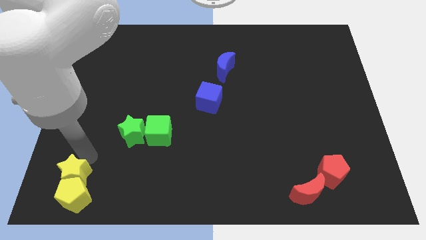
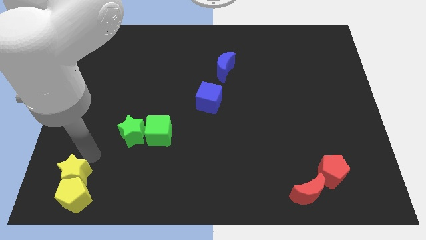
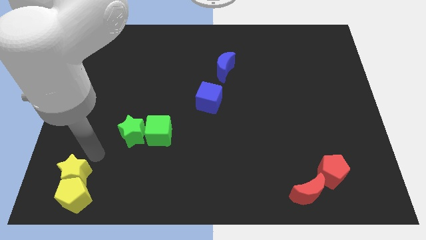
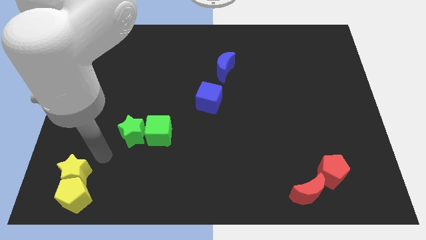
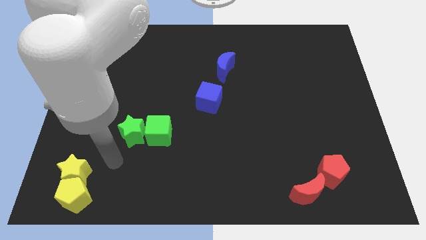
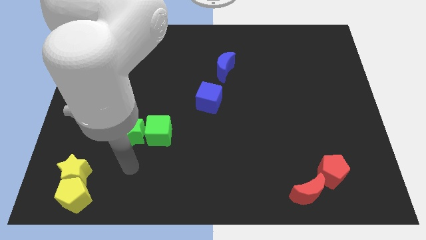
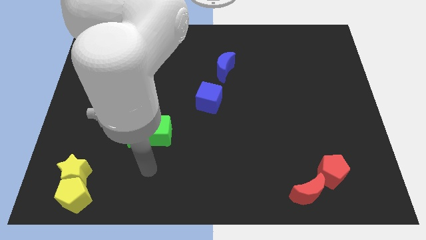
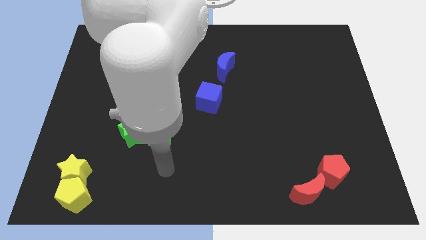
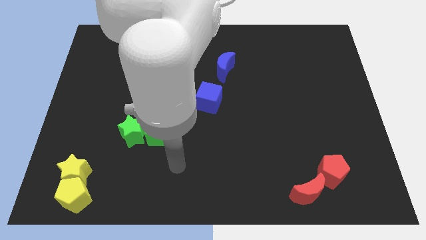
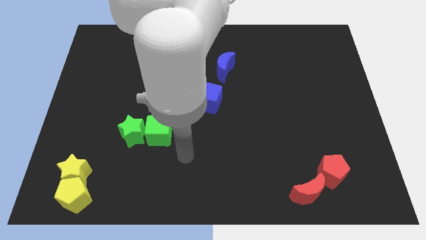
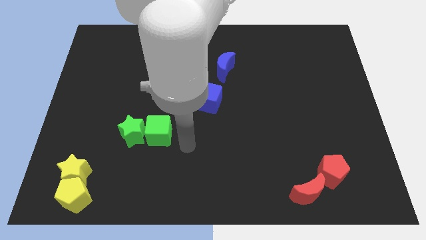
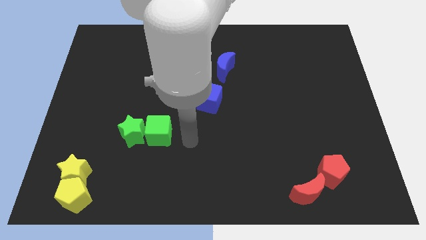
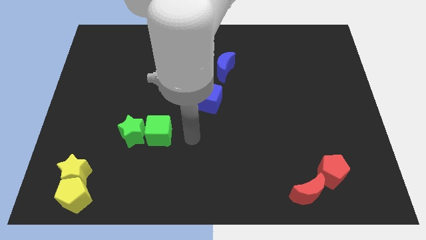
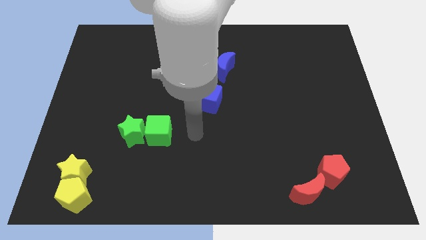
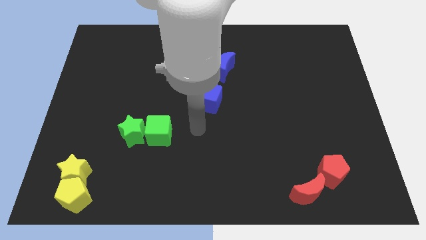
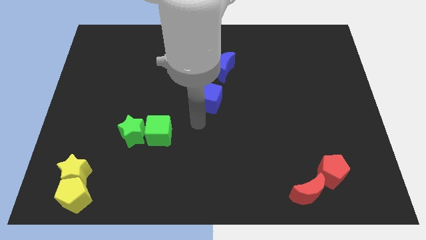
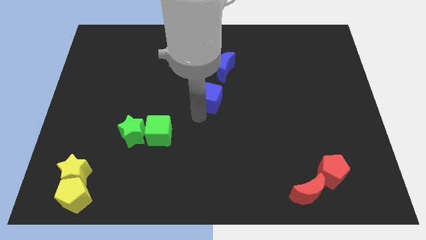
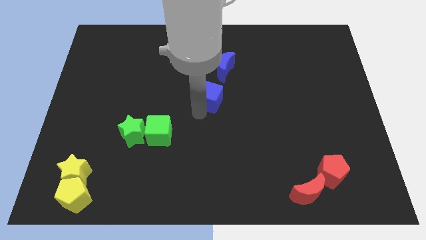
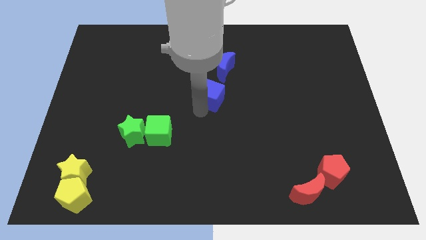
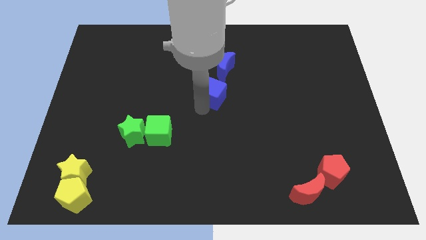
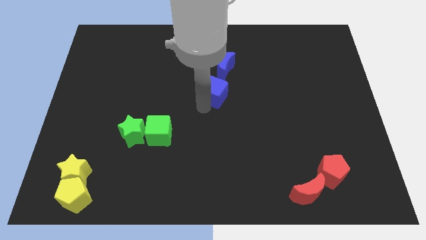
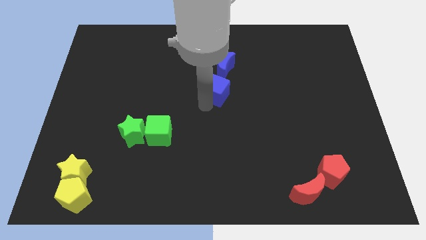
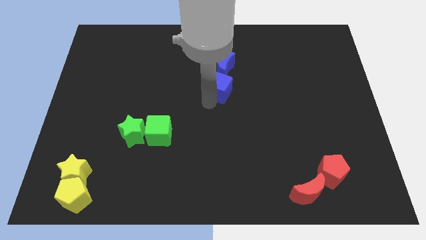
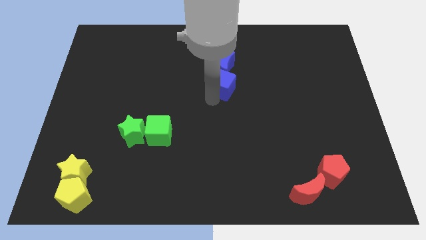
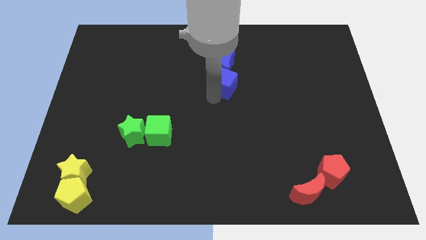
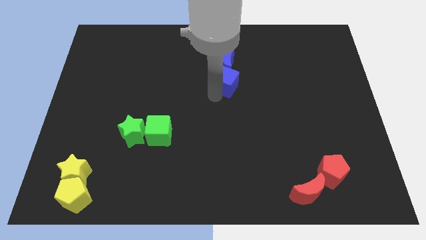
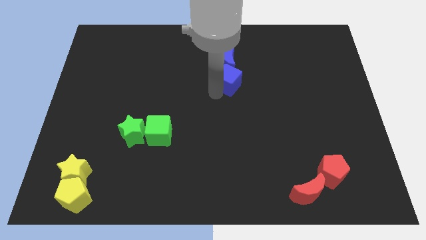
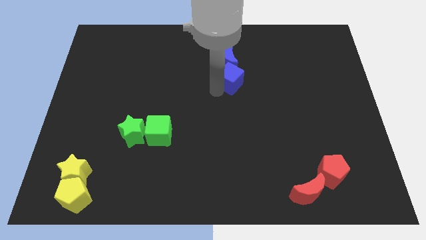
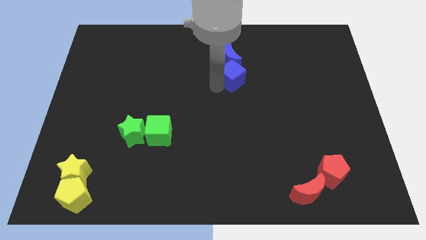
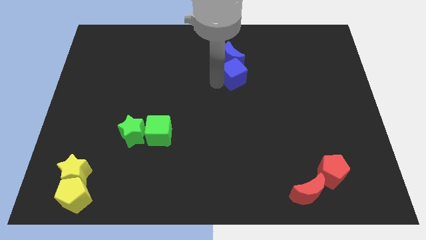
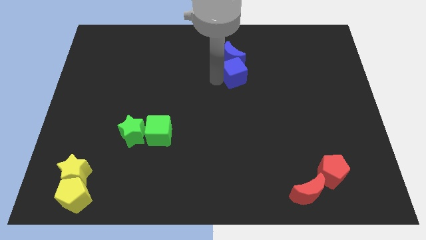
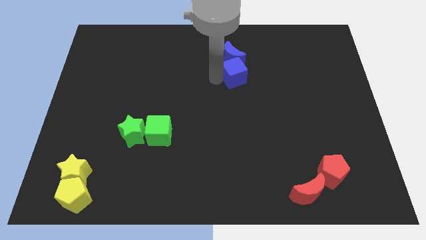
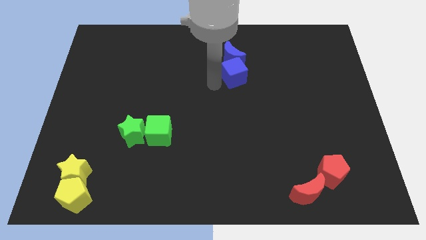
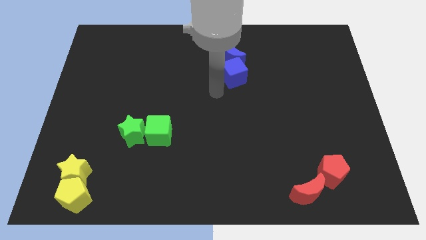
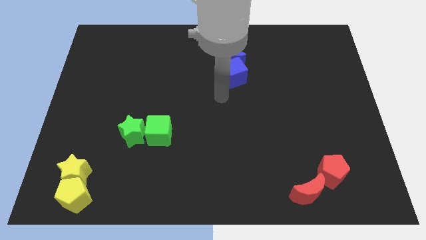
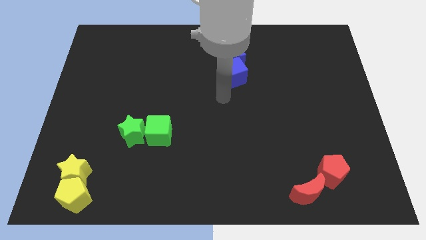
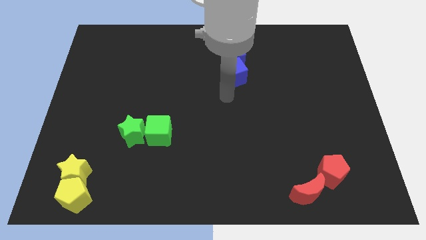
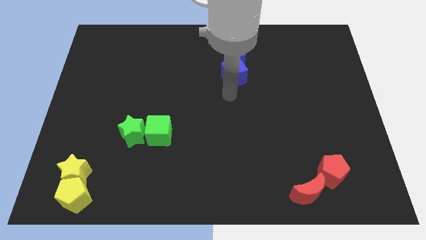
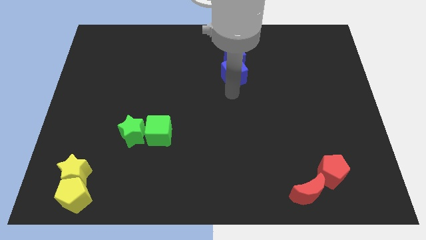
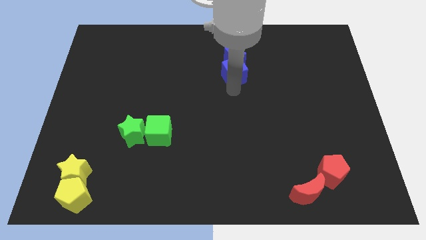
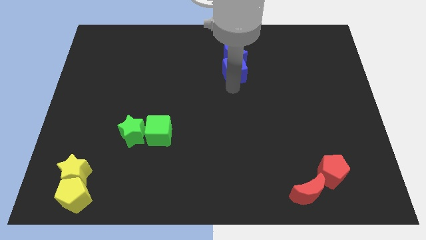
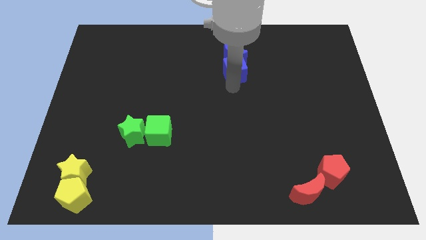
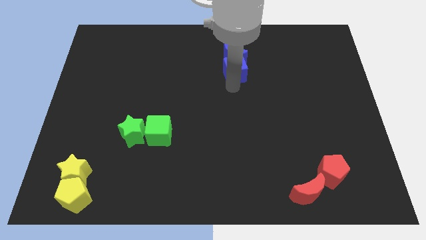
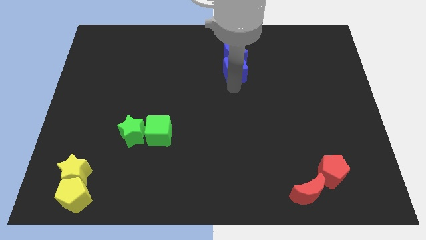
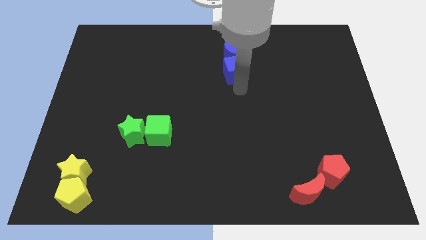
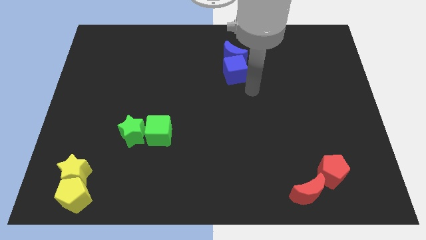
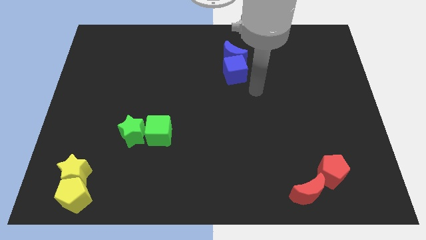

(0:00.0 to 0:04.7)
push the blue cube into the blue crescent

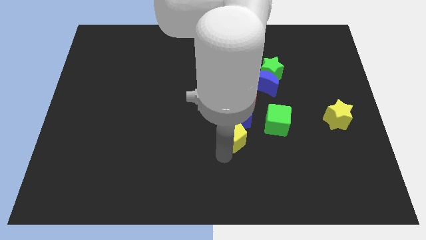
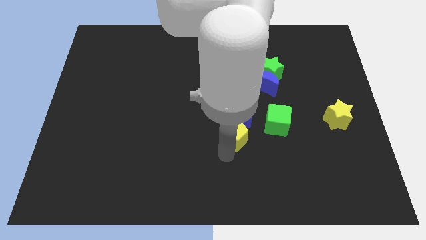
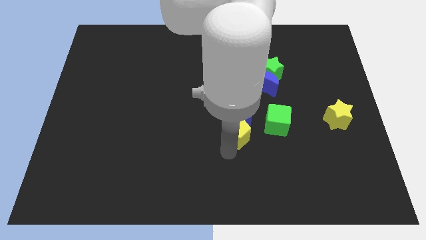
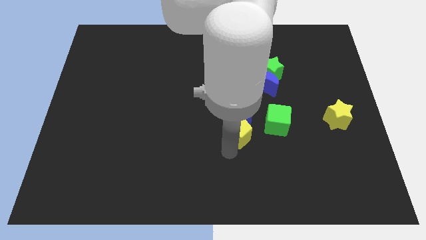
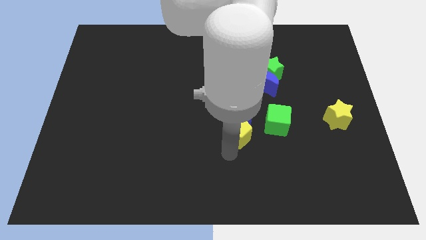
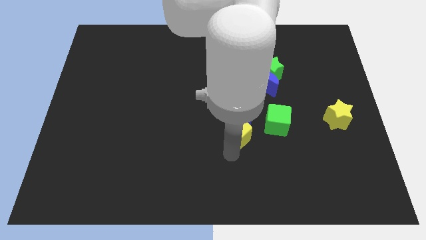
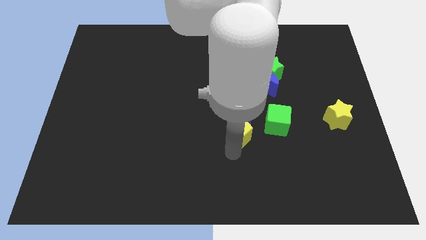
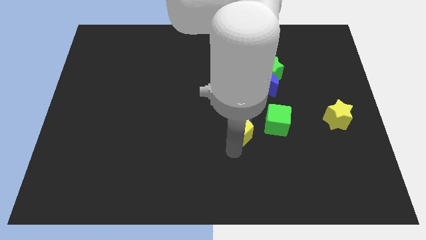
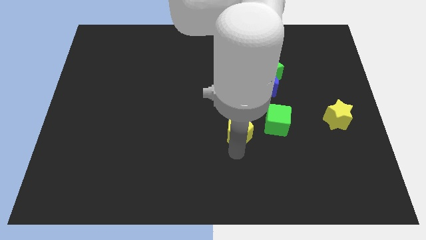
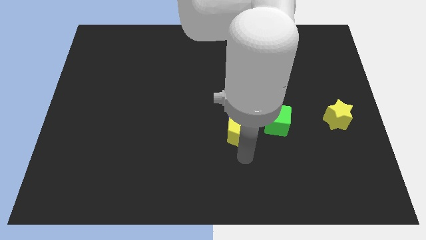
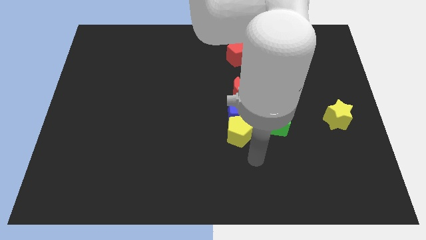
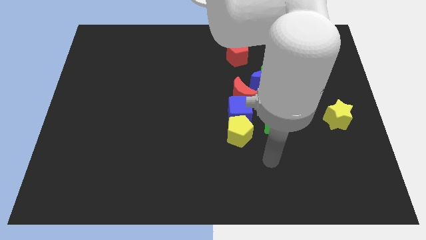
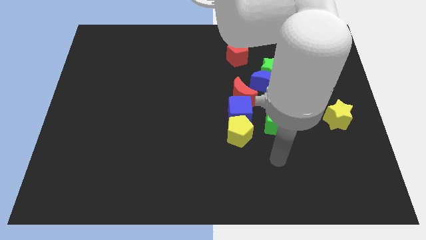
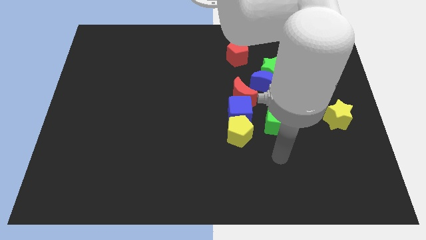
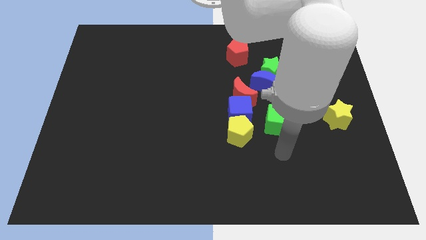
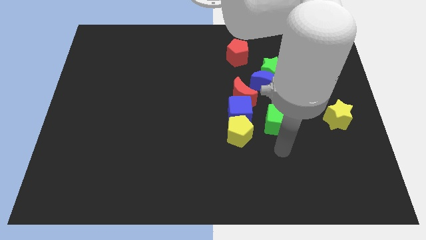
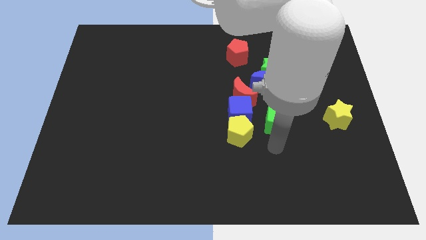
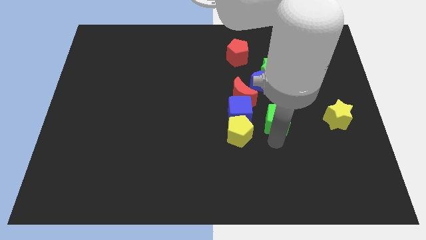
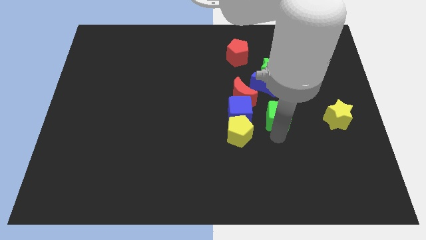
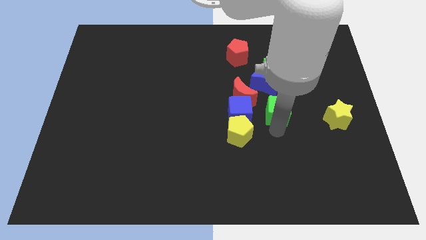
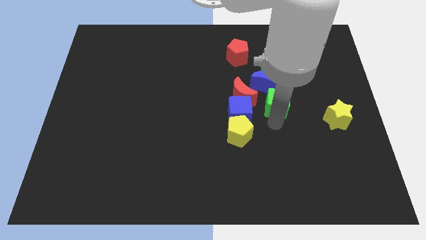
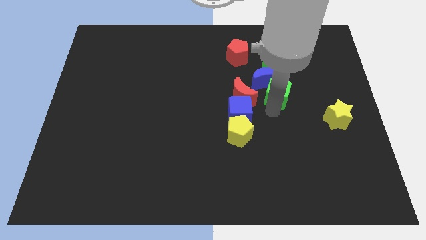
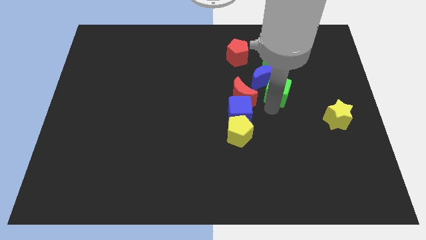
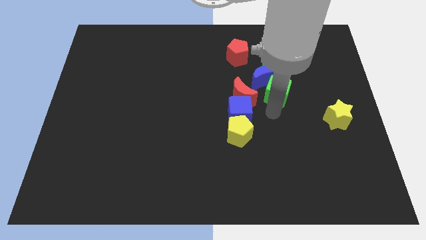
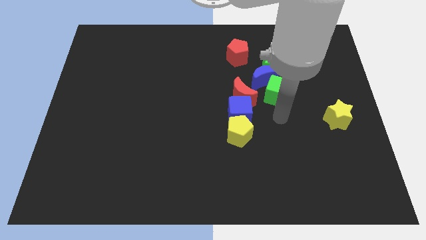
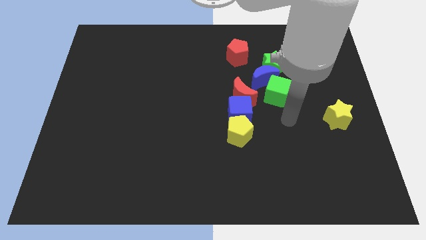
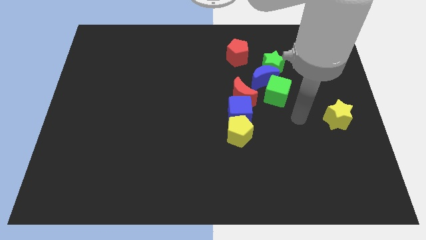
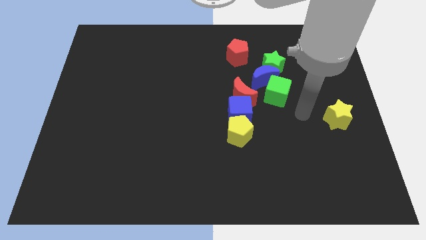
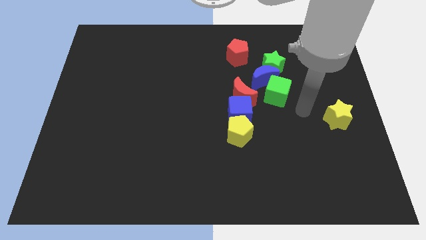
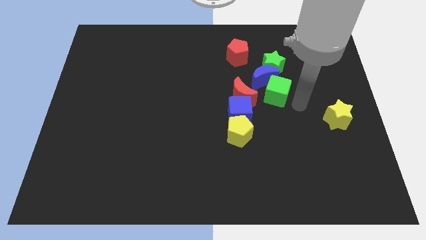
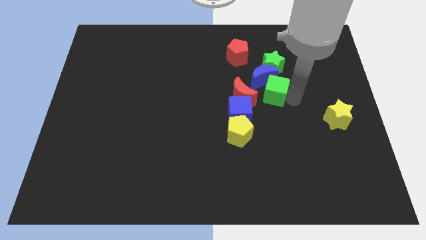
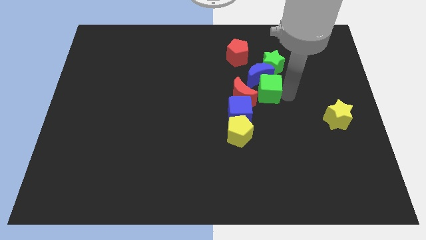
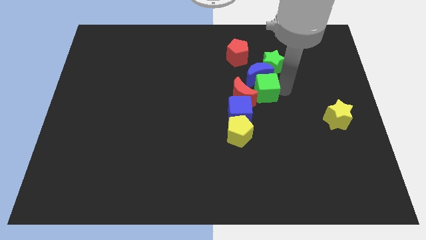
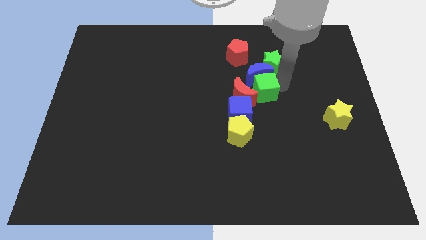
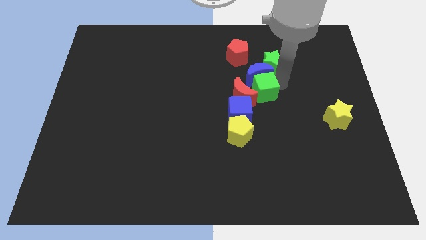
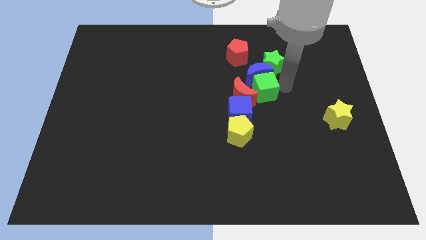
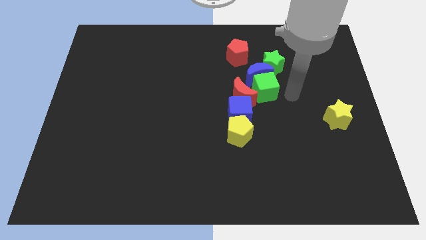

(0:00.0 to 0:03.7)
adjust the yellow pentagon and green cube to the top side

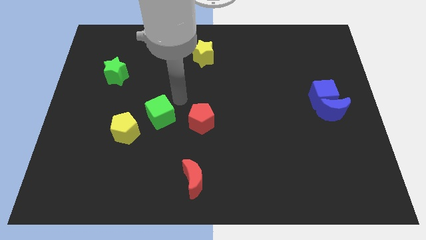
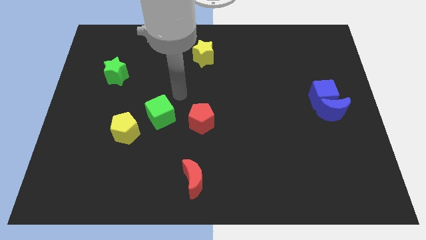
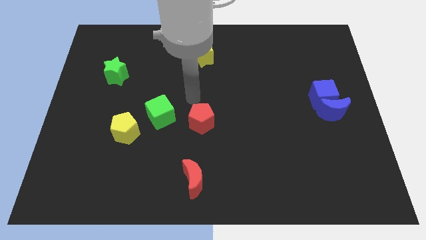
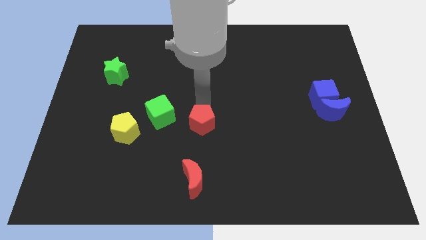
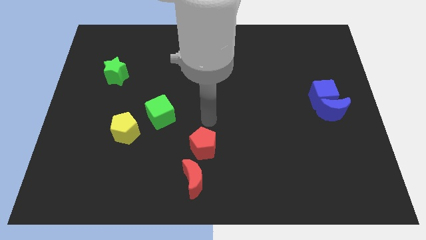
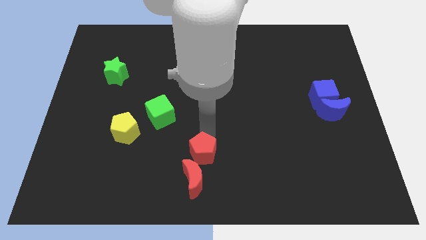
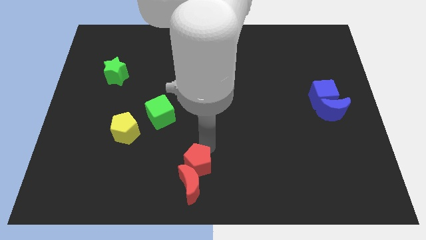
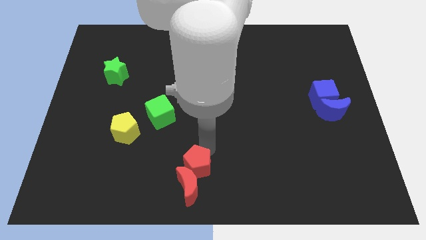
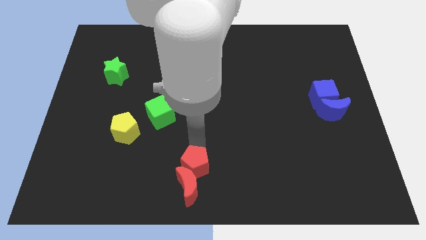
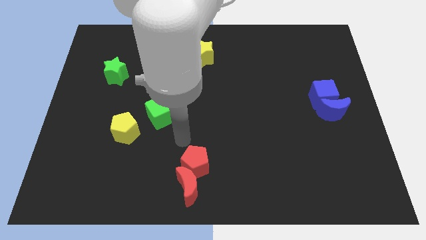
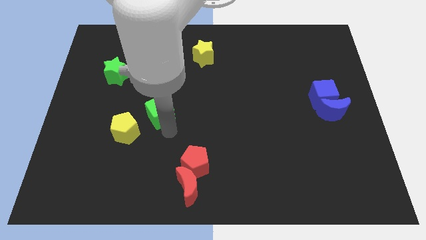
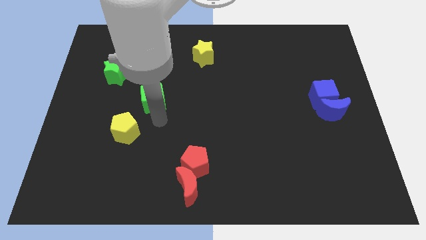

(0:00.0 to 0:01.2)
slide the red pentagon into the red moon
